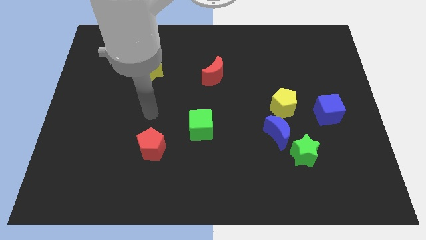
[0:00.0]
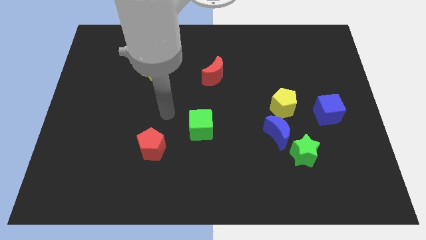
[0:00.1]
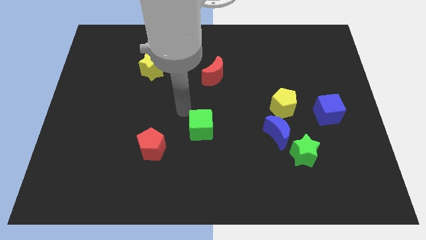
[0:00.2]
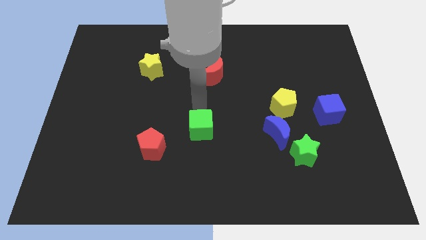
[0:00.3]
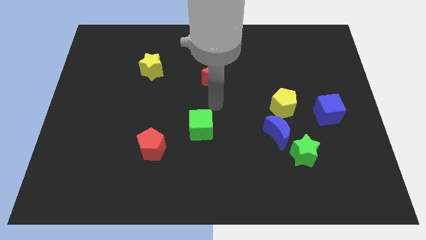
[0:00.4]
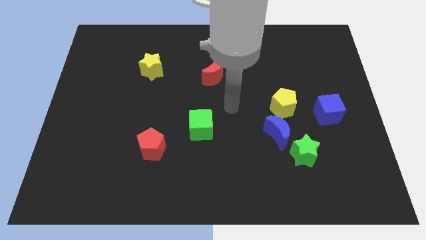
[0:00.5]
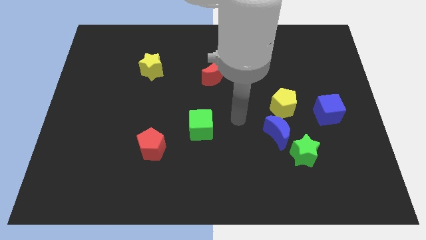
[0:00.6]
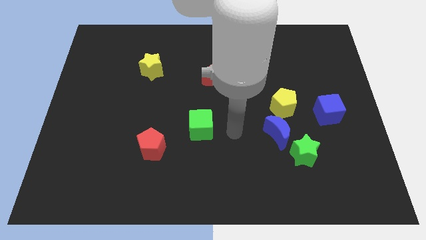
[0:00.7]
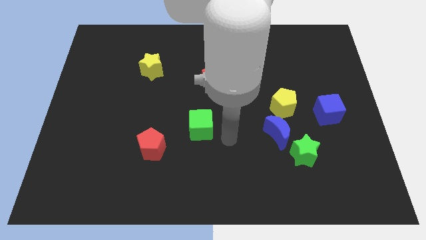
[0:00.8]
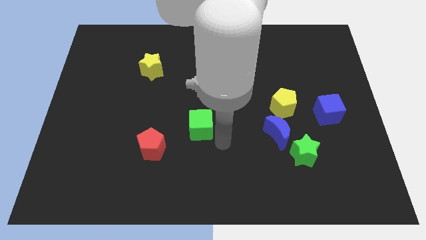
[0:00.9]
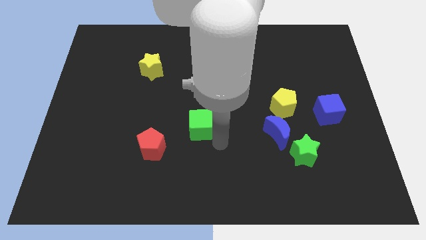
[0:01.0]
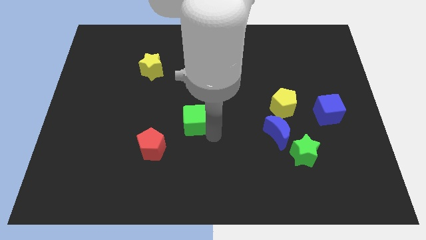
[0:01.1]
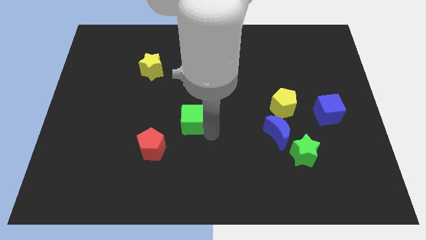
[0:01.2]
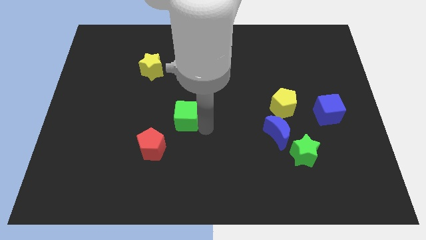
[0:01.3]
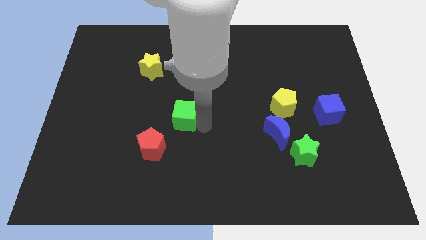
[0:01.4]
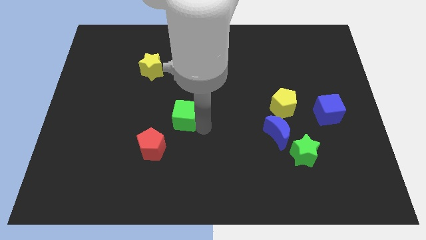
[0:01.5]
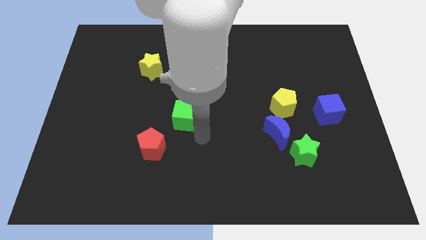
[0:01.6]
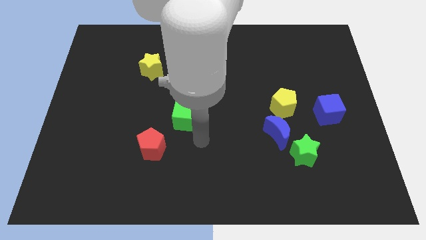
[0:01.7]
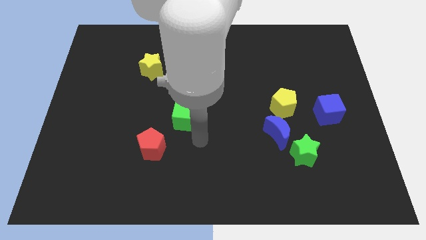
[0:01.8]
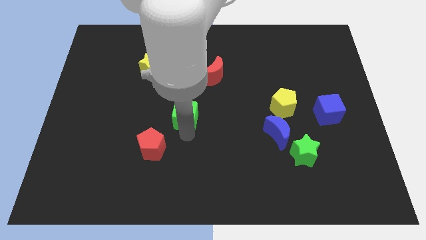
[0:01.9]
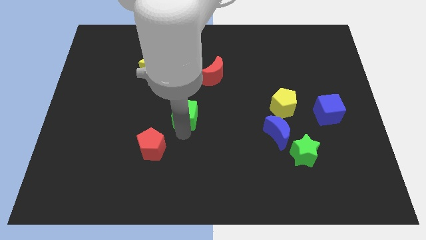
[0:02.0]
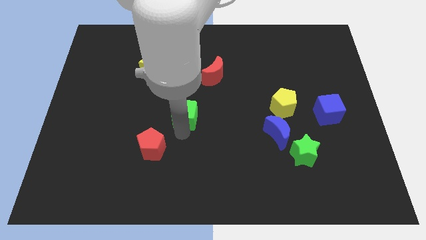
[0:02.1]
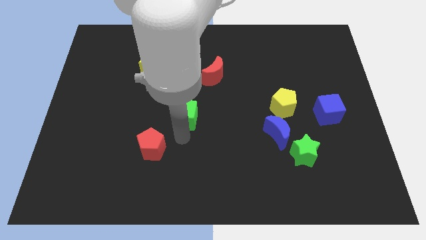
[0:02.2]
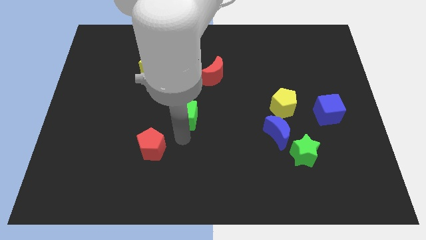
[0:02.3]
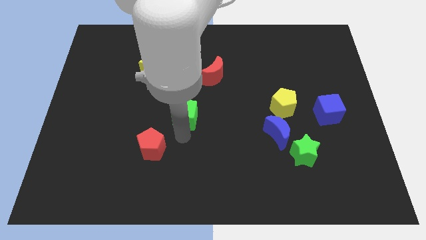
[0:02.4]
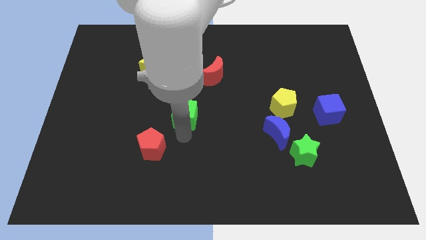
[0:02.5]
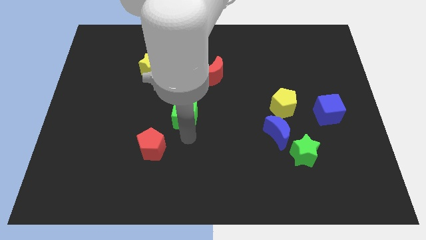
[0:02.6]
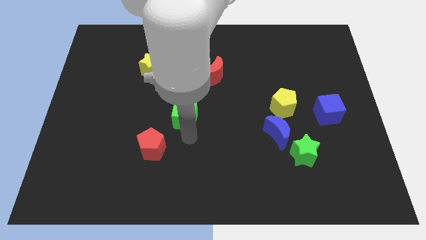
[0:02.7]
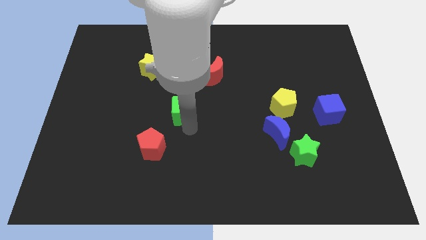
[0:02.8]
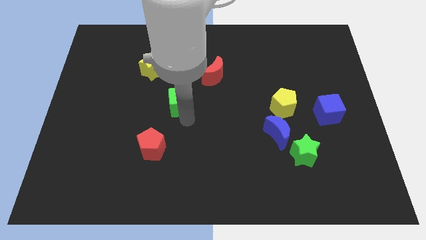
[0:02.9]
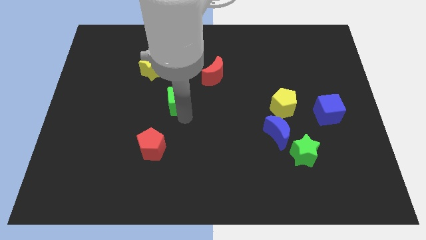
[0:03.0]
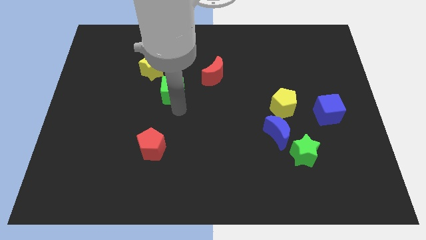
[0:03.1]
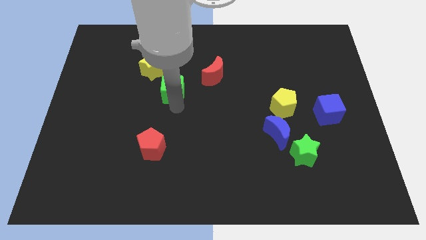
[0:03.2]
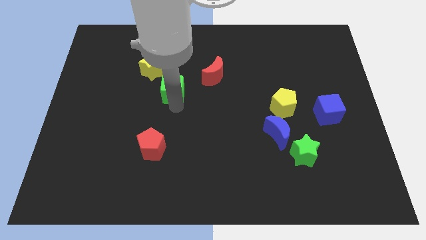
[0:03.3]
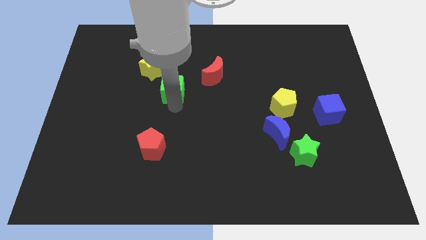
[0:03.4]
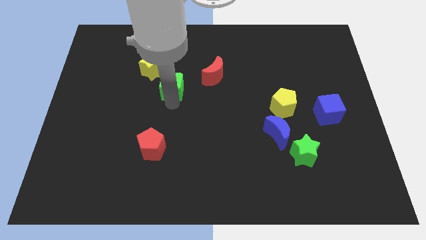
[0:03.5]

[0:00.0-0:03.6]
move the green cube diagonally to red crescent

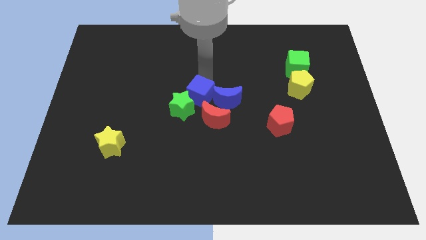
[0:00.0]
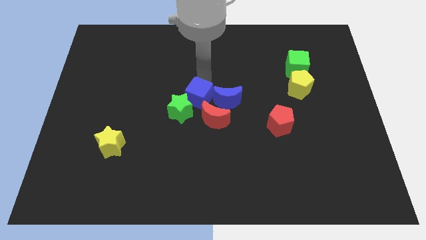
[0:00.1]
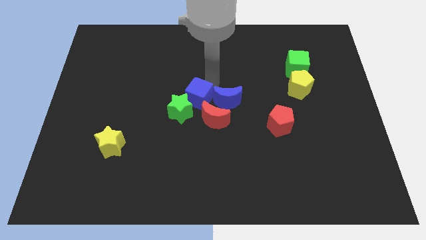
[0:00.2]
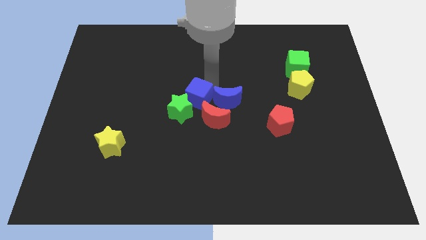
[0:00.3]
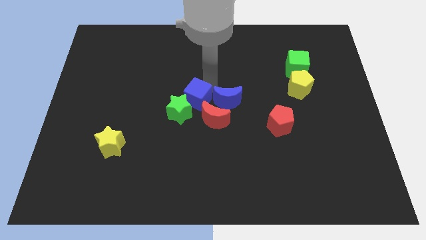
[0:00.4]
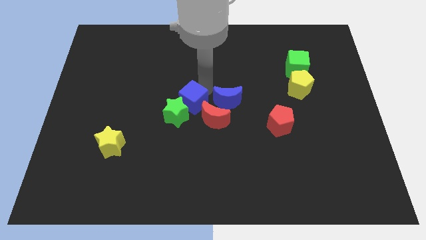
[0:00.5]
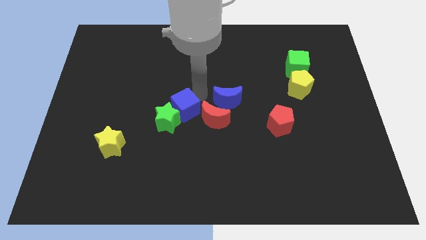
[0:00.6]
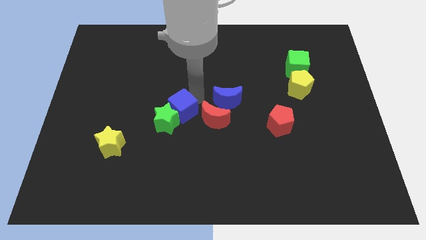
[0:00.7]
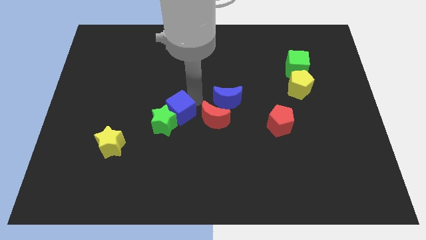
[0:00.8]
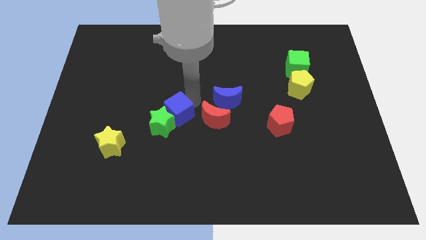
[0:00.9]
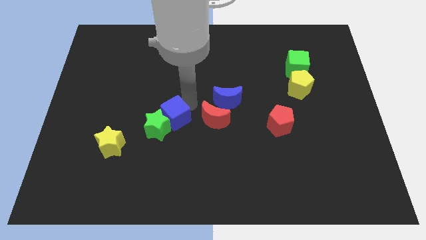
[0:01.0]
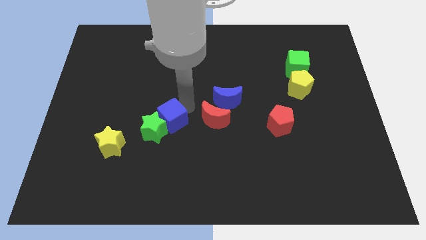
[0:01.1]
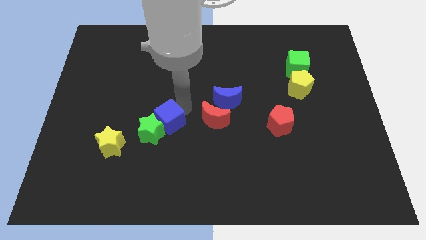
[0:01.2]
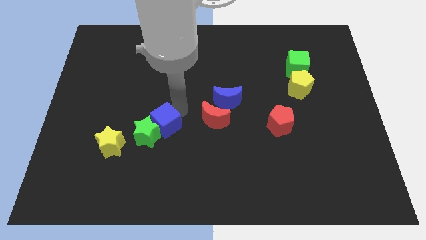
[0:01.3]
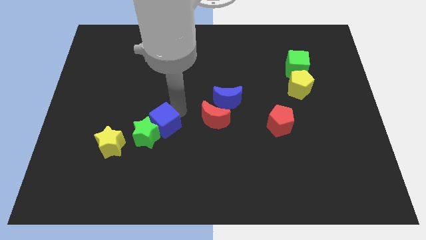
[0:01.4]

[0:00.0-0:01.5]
push blue cube and green star downwards

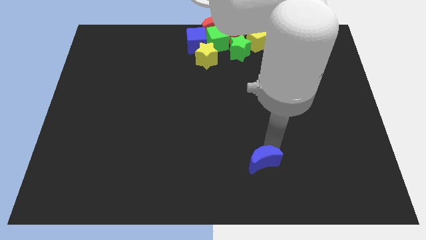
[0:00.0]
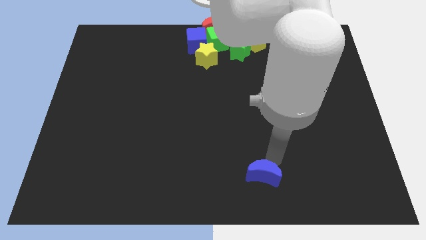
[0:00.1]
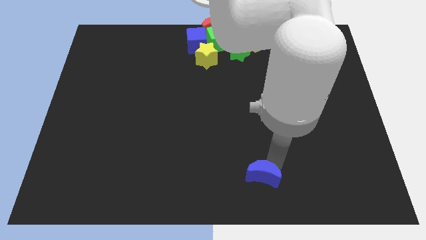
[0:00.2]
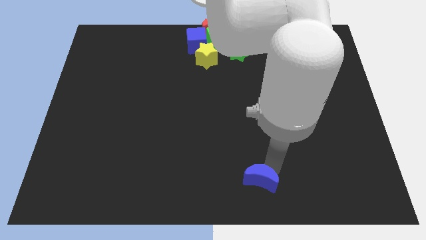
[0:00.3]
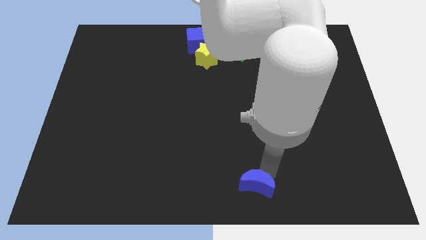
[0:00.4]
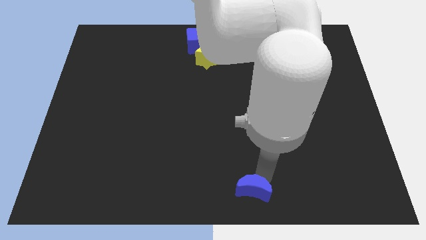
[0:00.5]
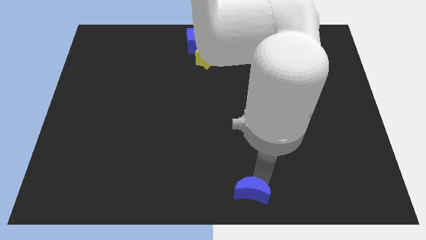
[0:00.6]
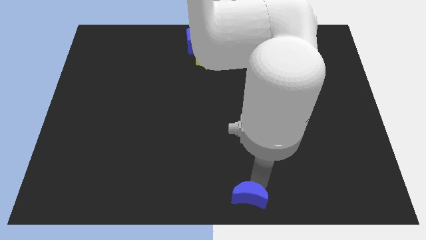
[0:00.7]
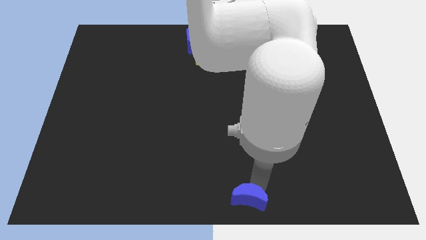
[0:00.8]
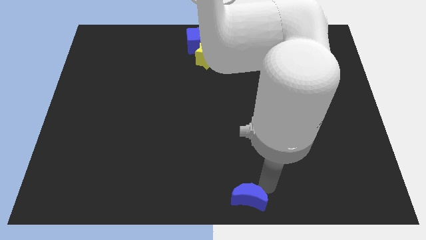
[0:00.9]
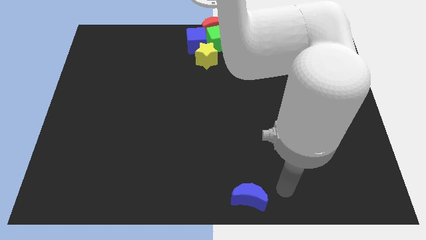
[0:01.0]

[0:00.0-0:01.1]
push the blue crescent to the bottom of the board

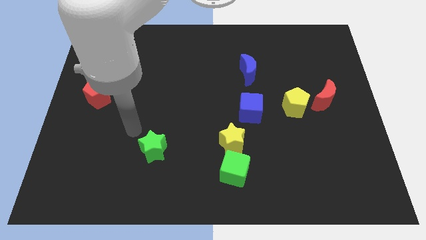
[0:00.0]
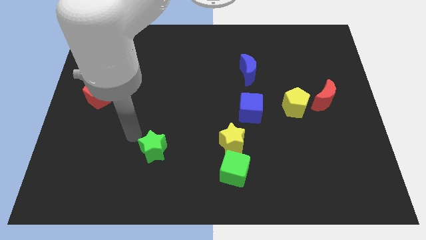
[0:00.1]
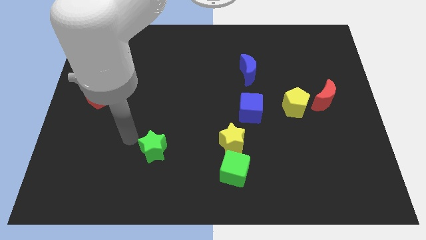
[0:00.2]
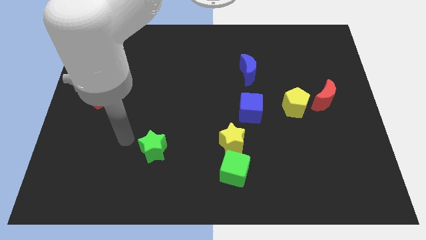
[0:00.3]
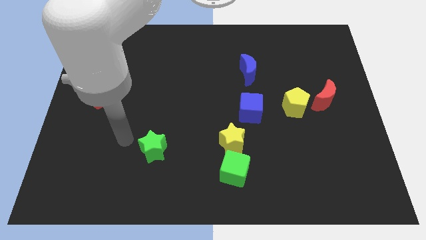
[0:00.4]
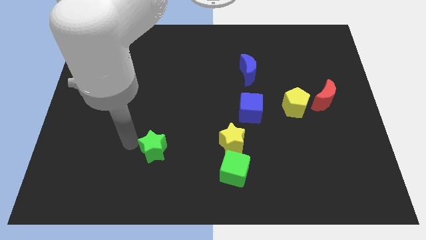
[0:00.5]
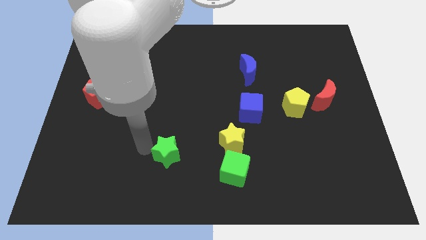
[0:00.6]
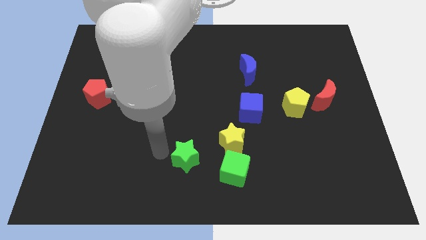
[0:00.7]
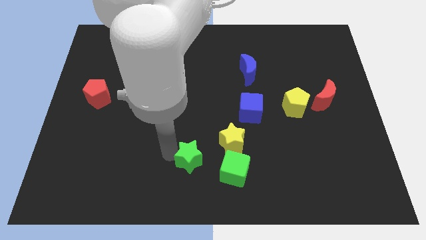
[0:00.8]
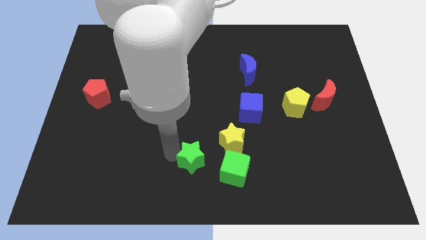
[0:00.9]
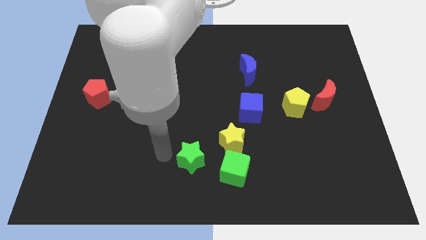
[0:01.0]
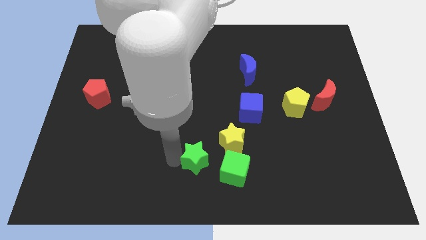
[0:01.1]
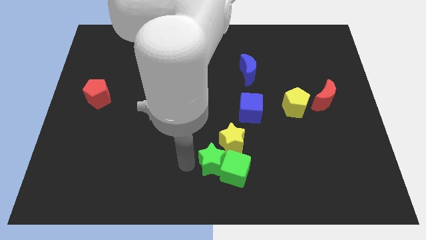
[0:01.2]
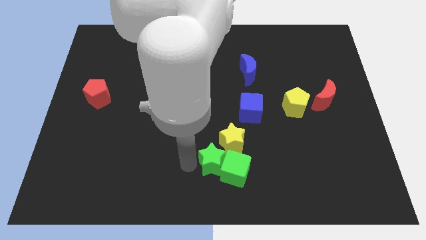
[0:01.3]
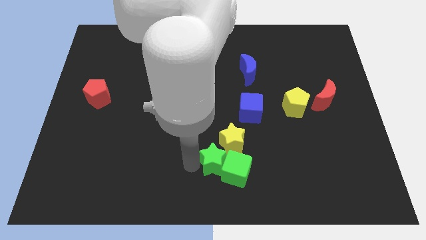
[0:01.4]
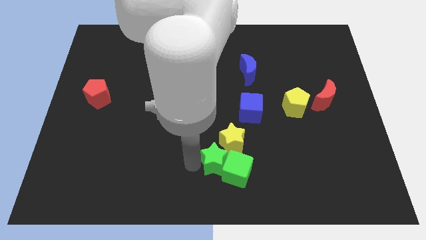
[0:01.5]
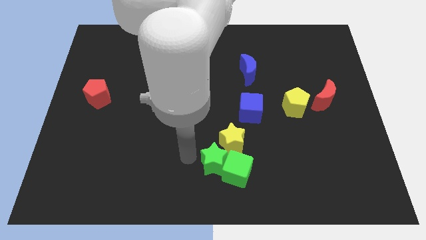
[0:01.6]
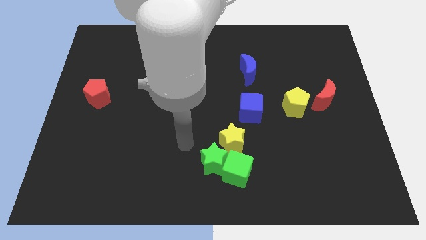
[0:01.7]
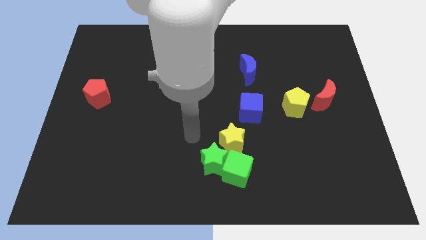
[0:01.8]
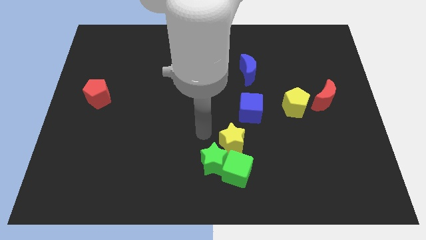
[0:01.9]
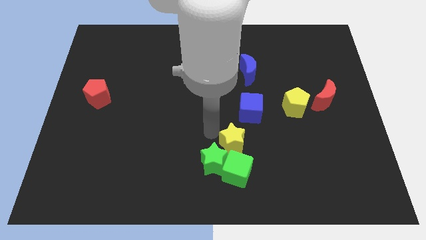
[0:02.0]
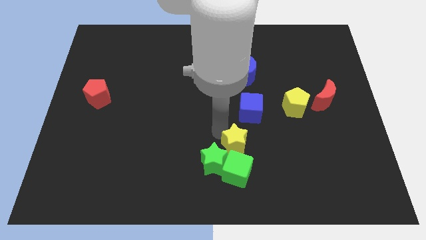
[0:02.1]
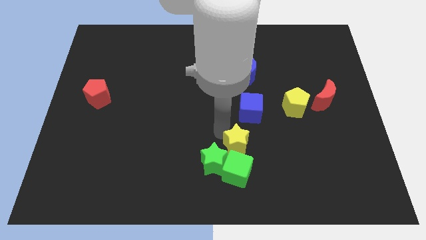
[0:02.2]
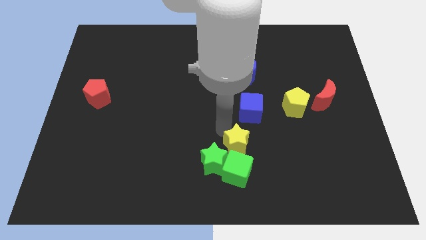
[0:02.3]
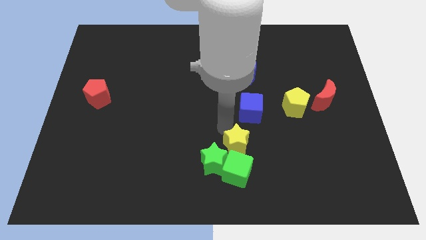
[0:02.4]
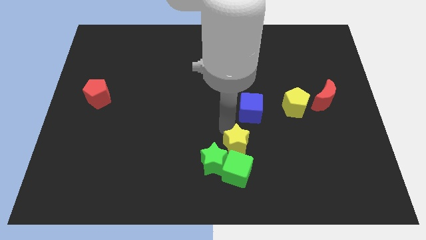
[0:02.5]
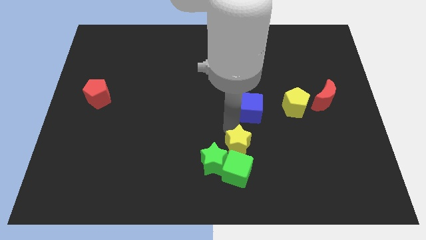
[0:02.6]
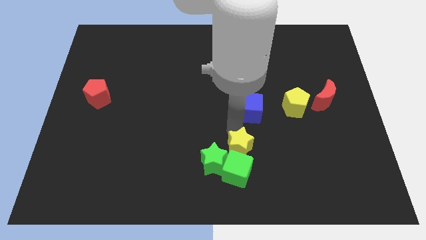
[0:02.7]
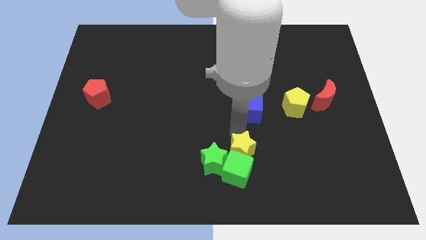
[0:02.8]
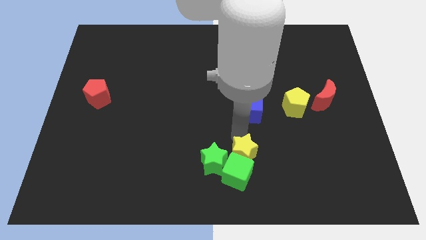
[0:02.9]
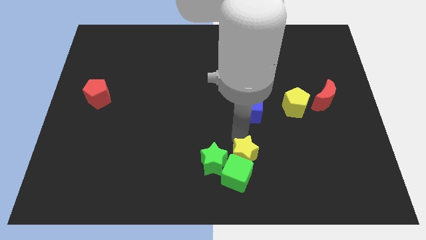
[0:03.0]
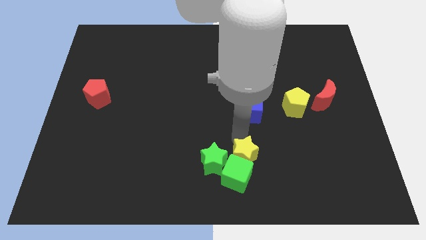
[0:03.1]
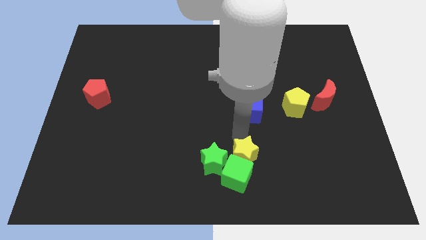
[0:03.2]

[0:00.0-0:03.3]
push green star and yellow star into the green cube
